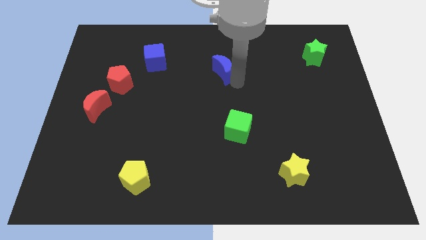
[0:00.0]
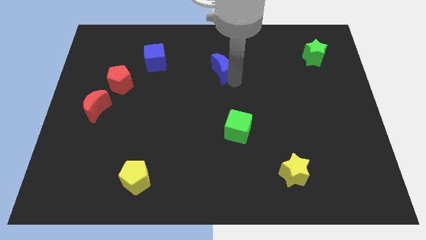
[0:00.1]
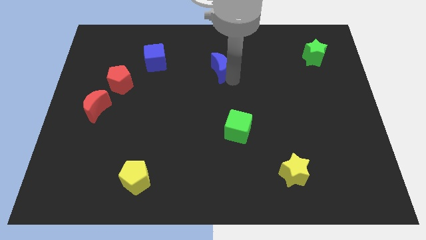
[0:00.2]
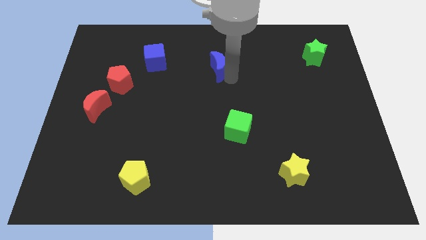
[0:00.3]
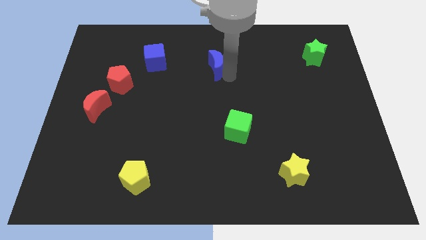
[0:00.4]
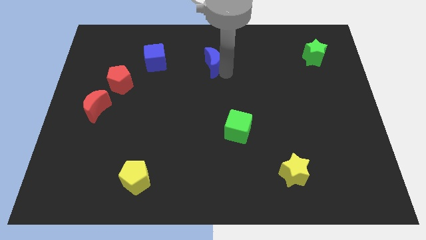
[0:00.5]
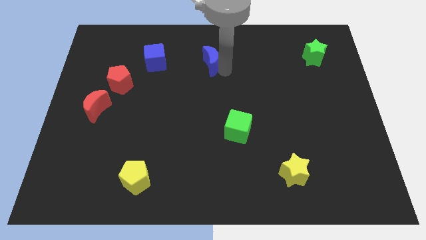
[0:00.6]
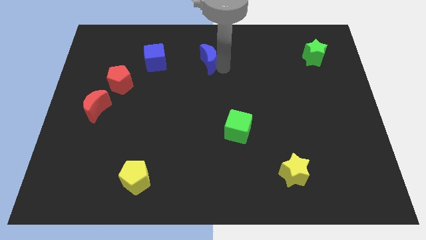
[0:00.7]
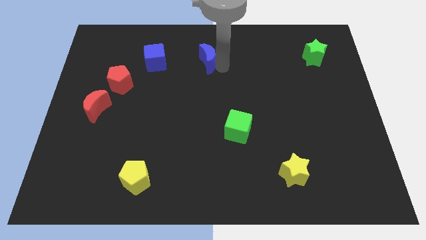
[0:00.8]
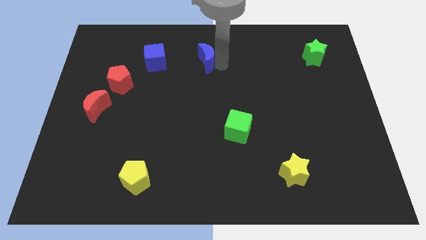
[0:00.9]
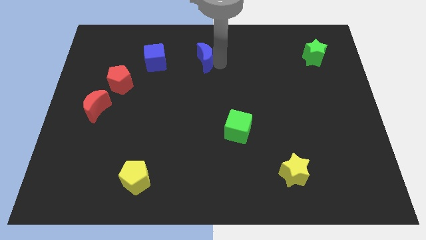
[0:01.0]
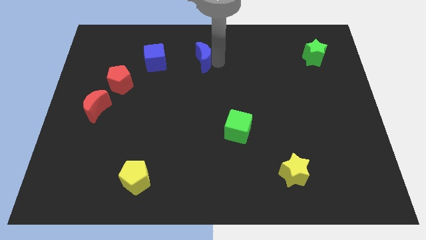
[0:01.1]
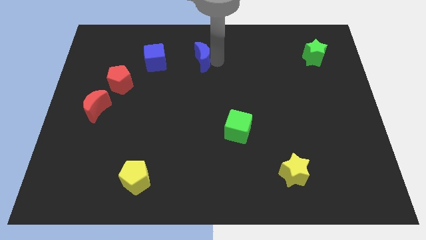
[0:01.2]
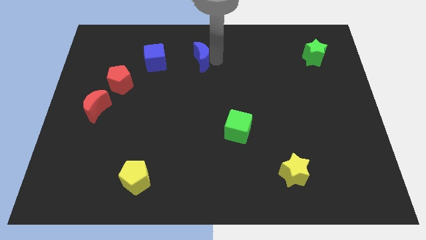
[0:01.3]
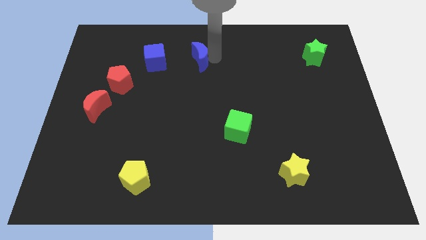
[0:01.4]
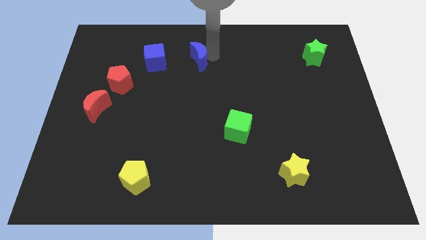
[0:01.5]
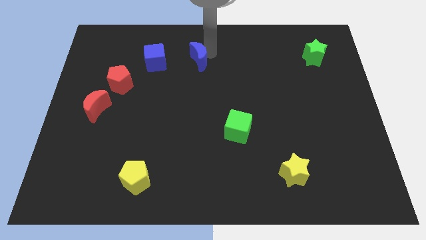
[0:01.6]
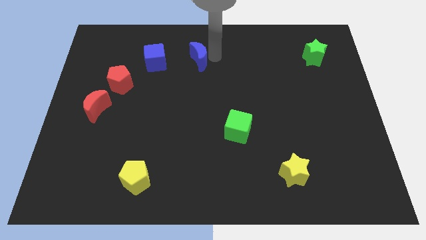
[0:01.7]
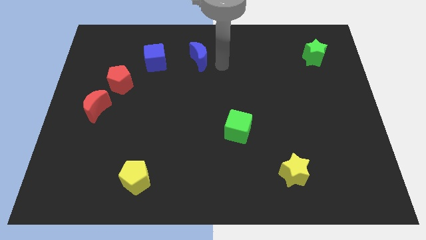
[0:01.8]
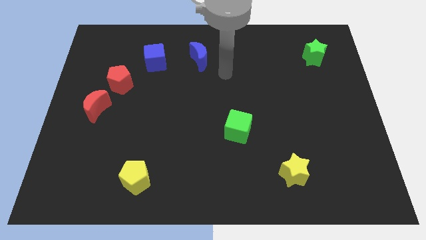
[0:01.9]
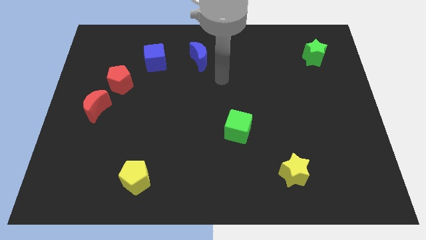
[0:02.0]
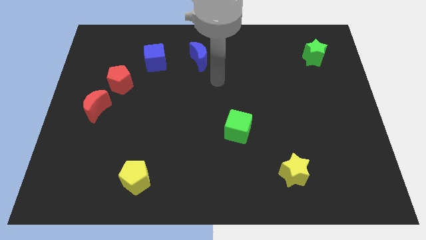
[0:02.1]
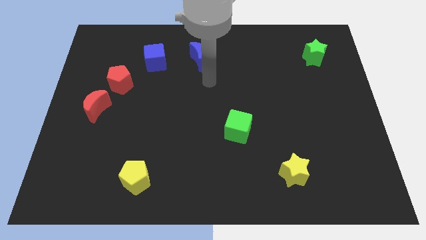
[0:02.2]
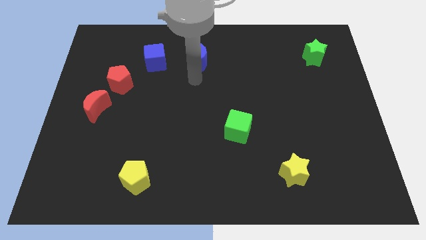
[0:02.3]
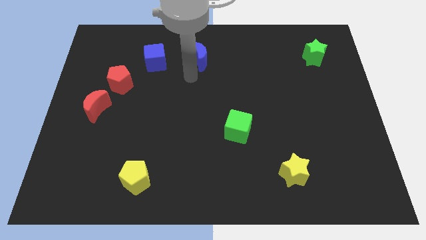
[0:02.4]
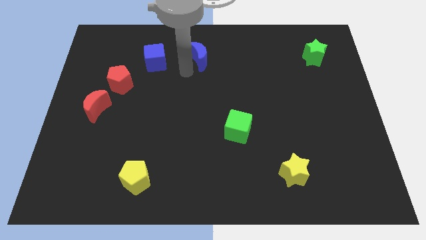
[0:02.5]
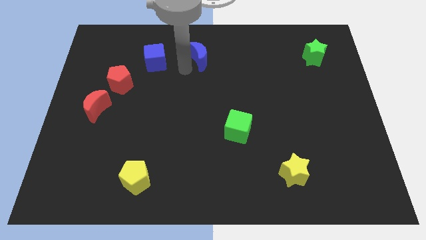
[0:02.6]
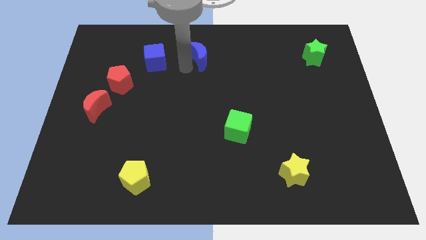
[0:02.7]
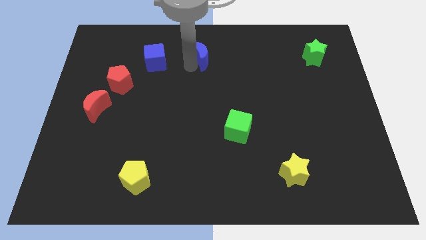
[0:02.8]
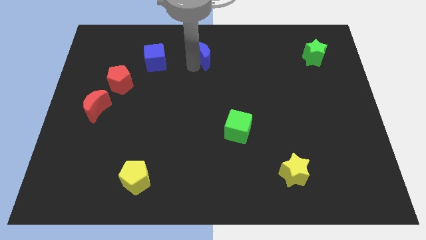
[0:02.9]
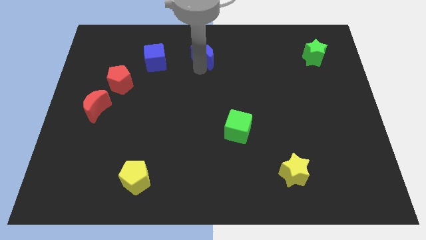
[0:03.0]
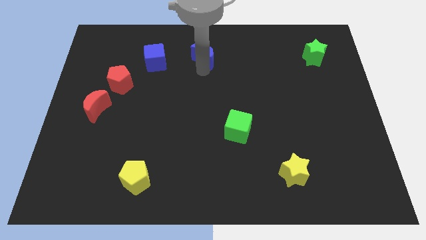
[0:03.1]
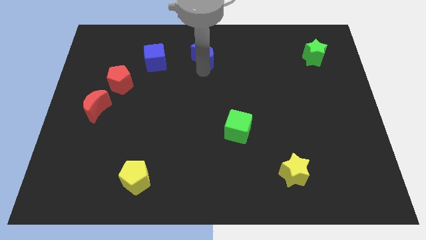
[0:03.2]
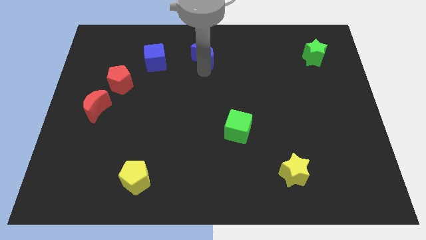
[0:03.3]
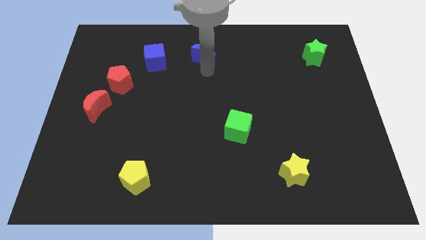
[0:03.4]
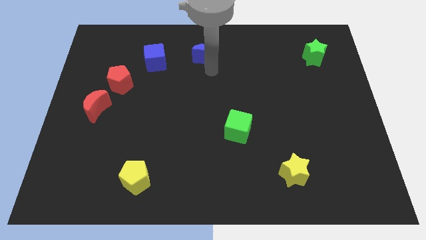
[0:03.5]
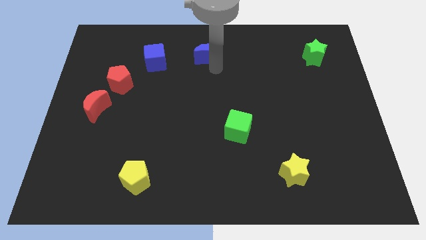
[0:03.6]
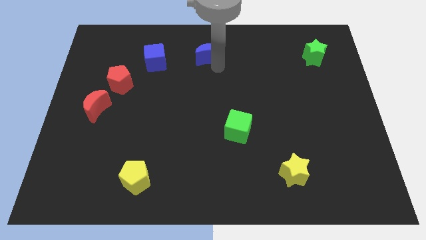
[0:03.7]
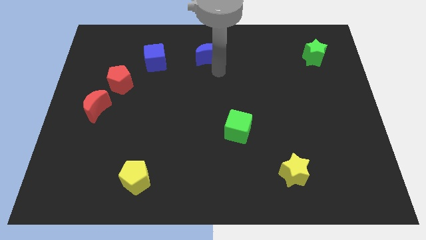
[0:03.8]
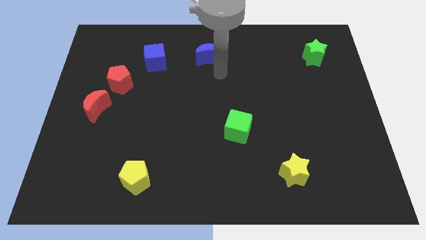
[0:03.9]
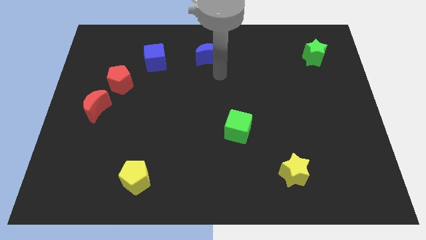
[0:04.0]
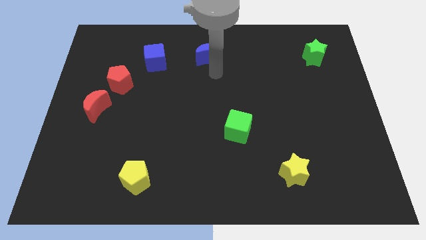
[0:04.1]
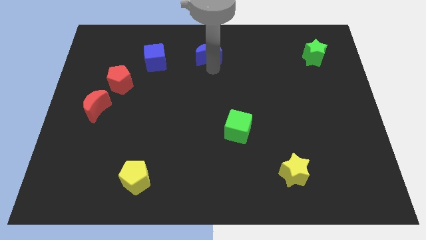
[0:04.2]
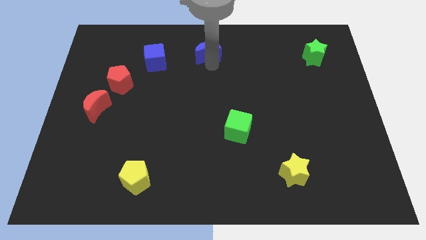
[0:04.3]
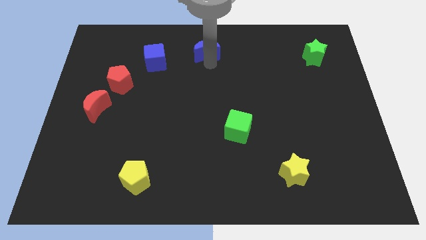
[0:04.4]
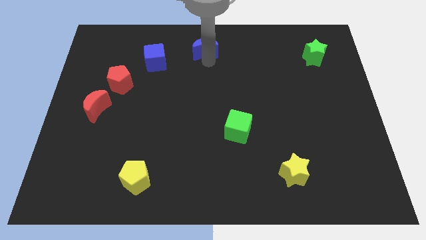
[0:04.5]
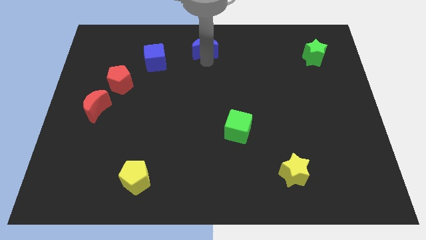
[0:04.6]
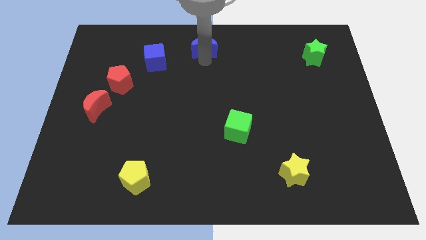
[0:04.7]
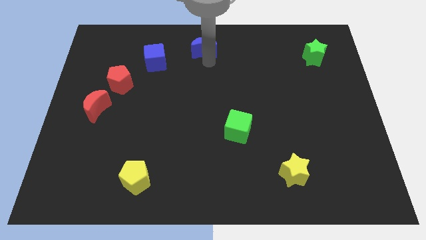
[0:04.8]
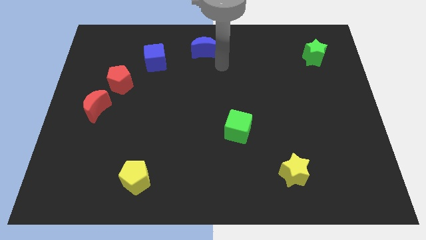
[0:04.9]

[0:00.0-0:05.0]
place blue crescent to the right of blue block

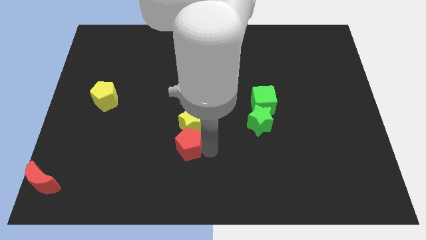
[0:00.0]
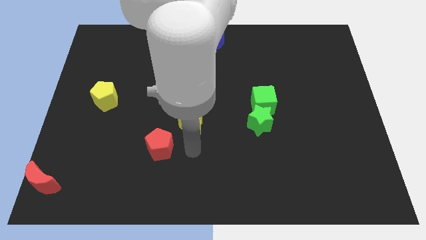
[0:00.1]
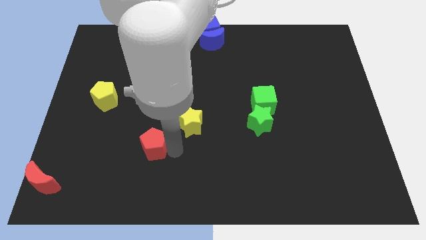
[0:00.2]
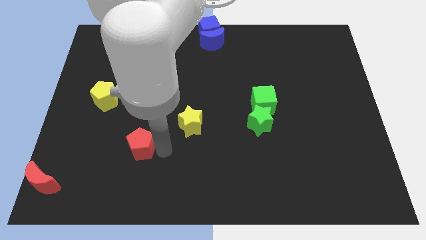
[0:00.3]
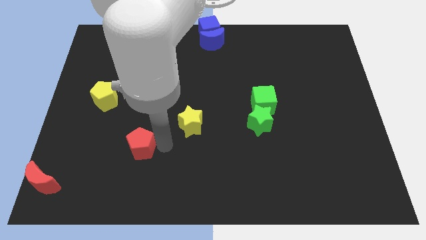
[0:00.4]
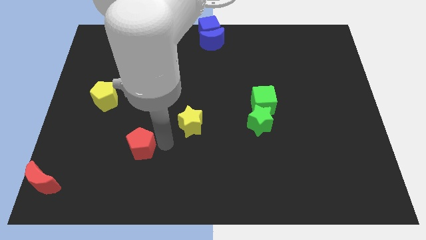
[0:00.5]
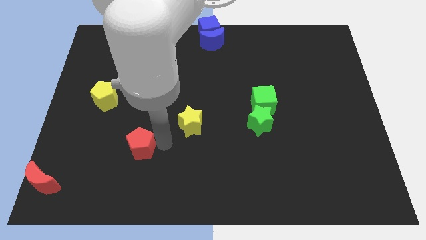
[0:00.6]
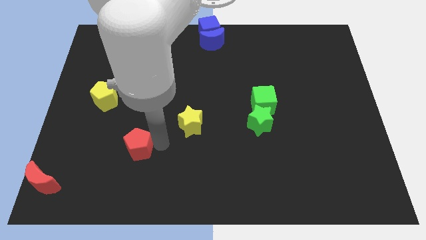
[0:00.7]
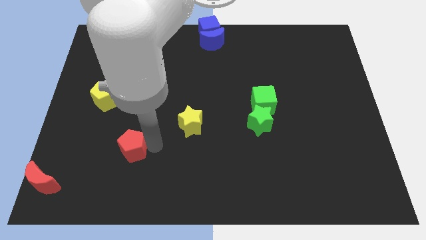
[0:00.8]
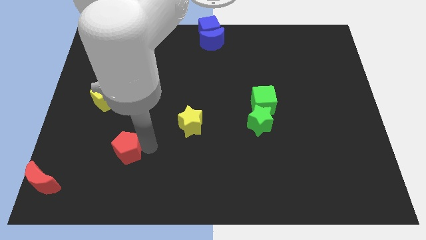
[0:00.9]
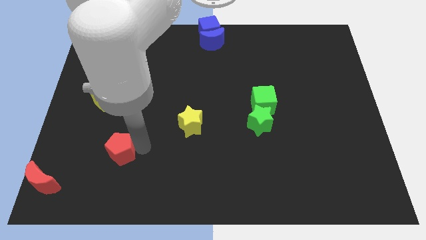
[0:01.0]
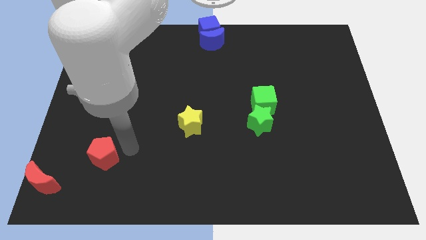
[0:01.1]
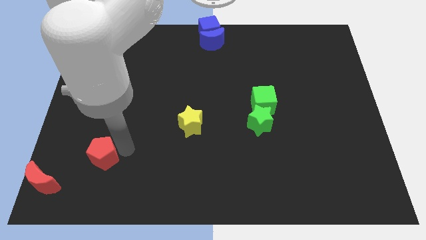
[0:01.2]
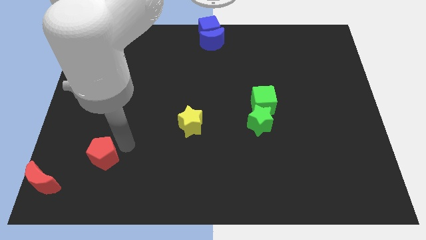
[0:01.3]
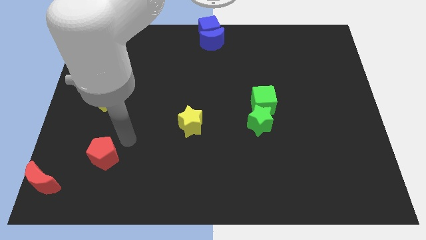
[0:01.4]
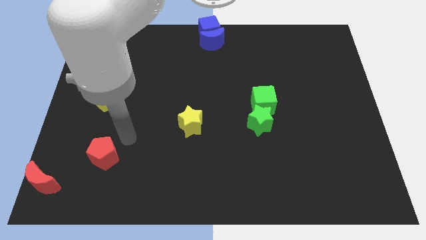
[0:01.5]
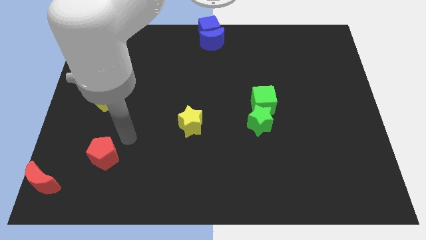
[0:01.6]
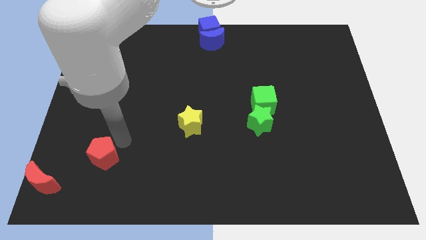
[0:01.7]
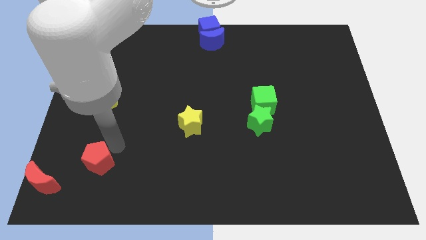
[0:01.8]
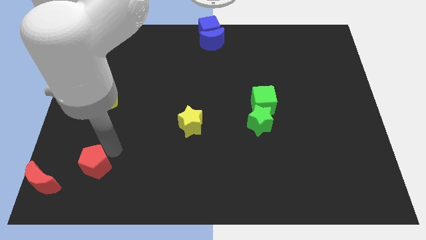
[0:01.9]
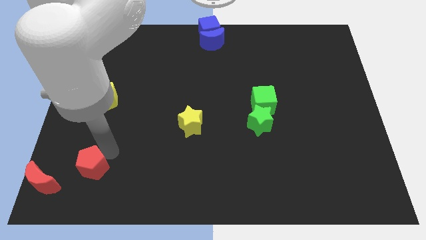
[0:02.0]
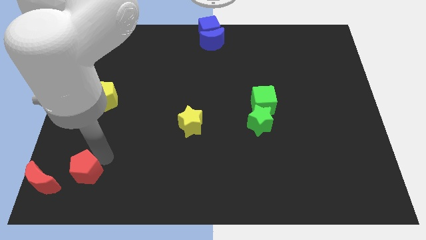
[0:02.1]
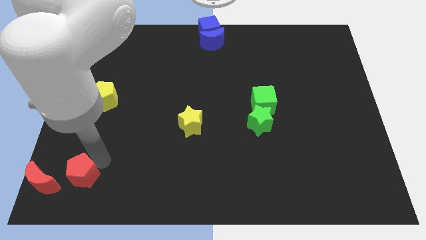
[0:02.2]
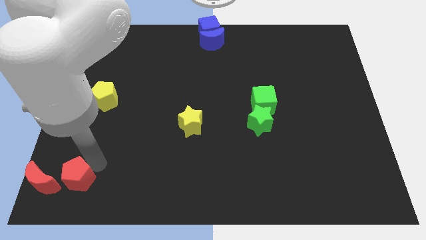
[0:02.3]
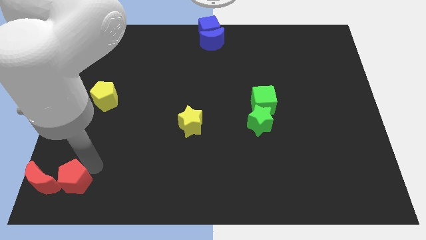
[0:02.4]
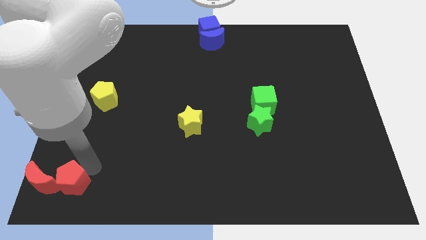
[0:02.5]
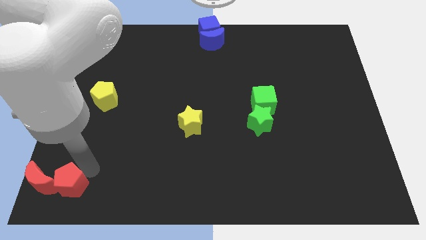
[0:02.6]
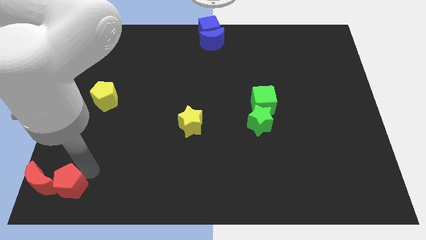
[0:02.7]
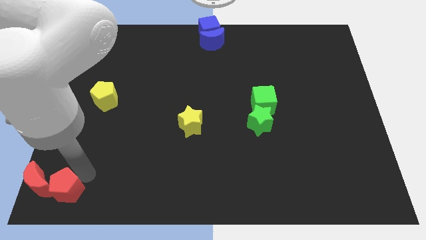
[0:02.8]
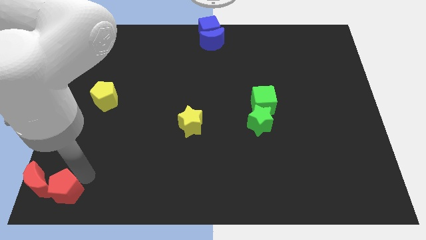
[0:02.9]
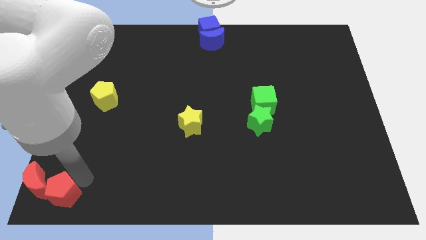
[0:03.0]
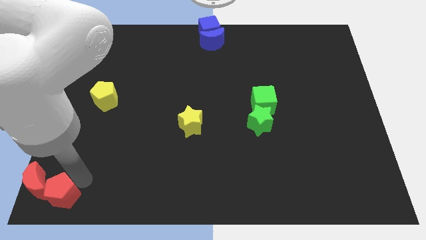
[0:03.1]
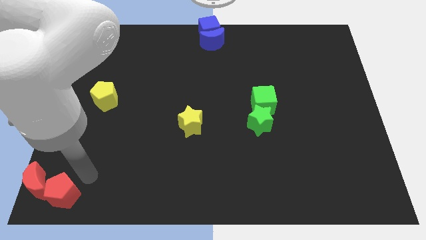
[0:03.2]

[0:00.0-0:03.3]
move the red pentagon to the right of red moon at the bottom

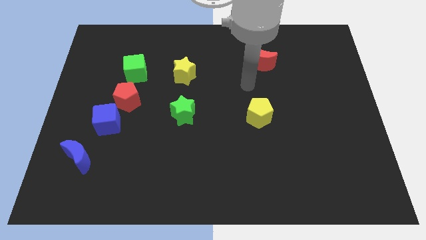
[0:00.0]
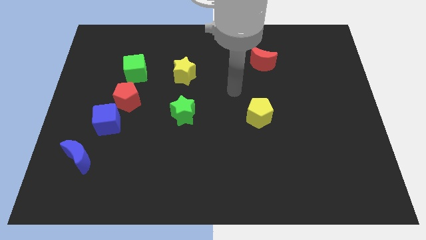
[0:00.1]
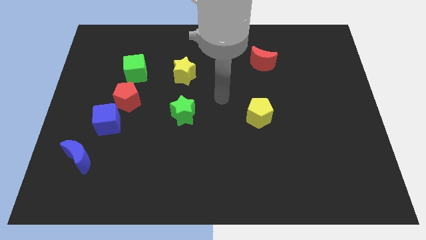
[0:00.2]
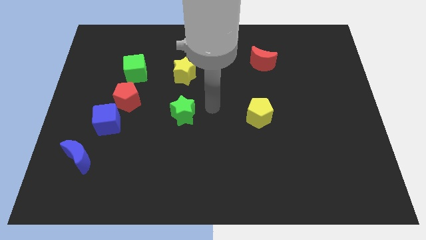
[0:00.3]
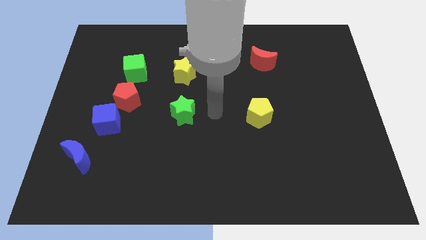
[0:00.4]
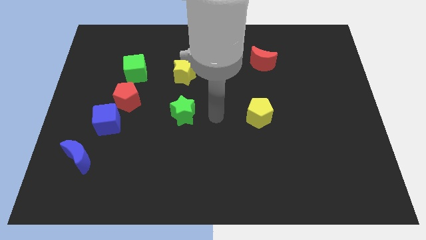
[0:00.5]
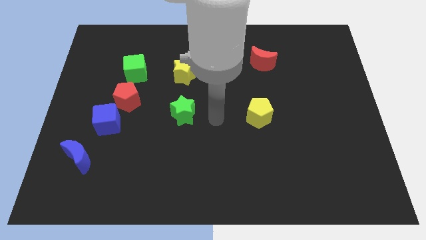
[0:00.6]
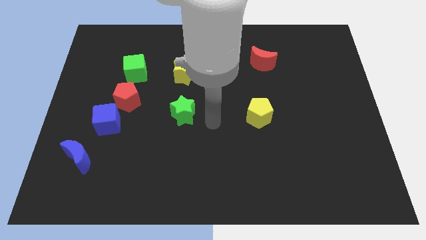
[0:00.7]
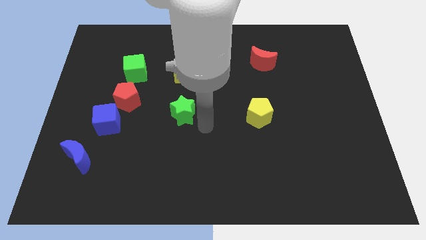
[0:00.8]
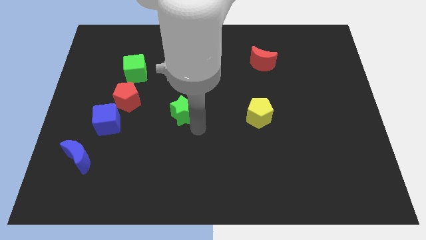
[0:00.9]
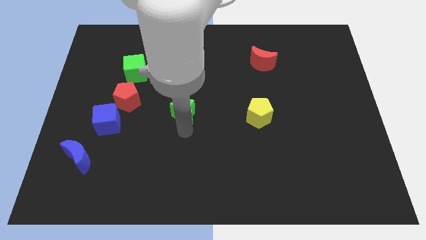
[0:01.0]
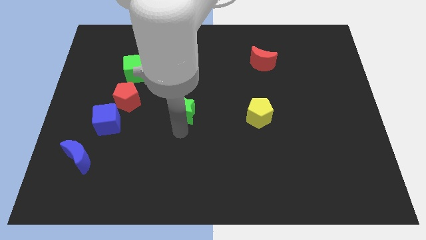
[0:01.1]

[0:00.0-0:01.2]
move the arm to the bottom of the green star
